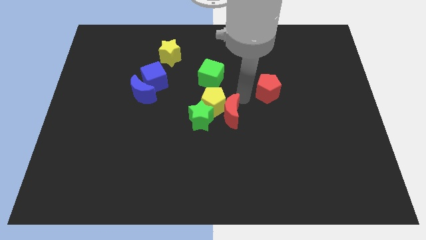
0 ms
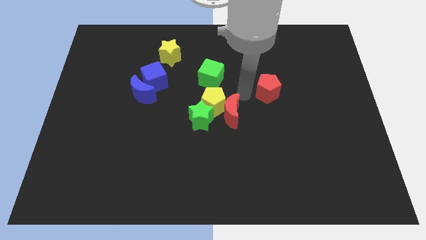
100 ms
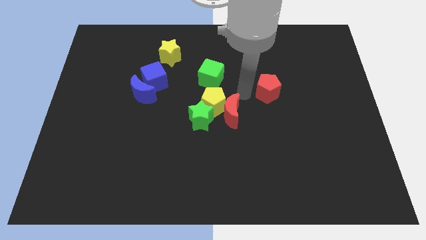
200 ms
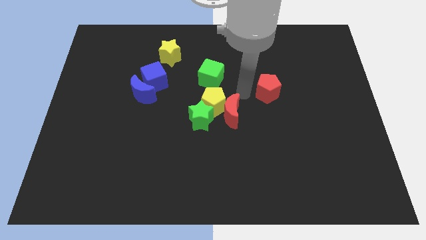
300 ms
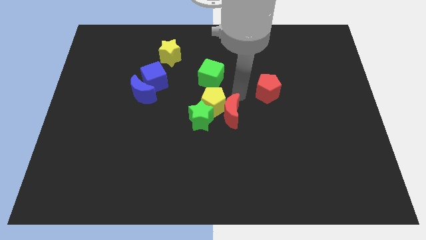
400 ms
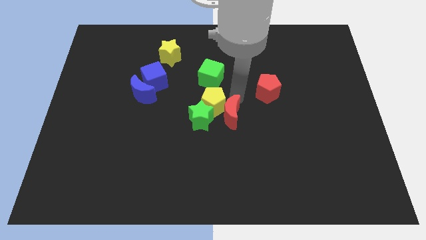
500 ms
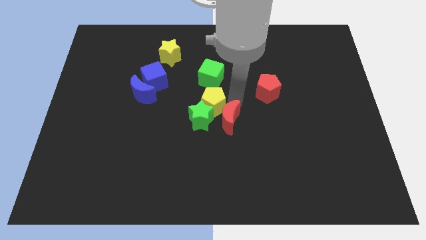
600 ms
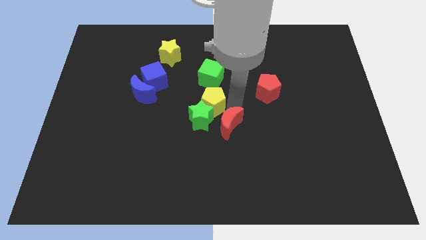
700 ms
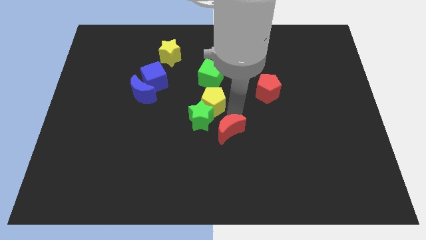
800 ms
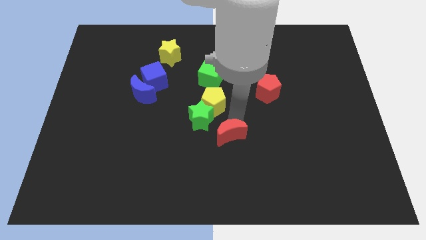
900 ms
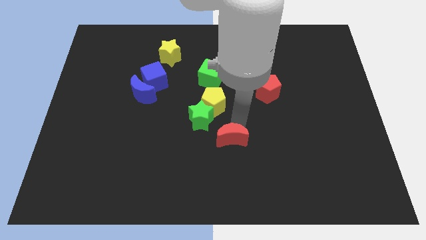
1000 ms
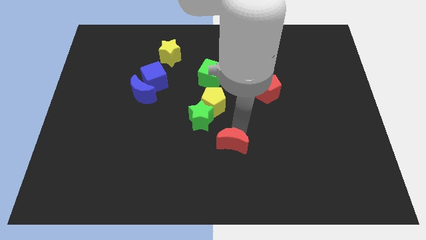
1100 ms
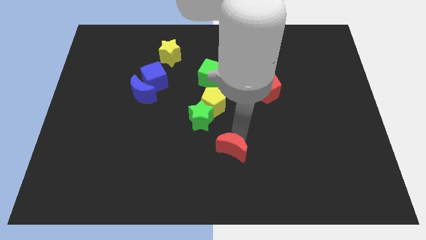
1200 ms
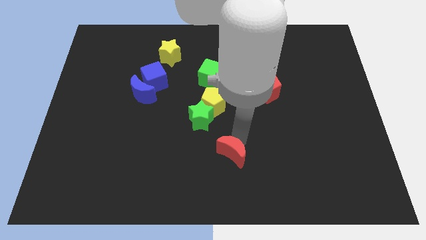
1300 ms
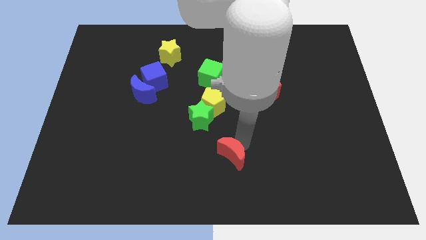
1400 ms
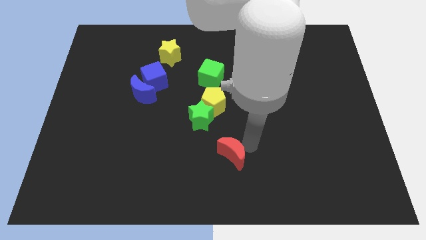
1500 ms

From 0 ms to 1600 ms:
separate the red moon from the yellow pentagon

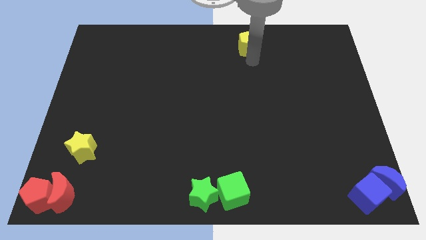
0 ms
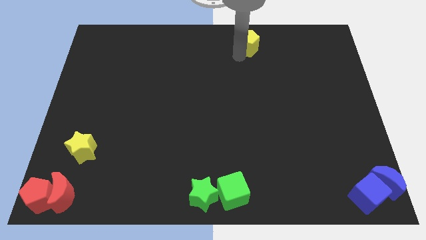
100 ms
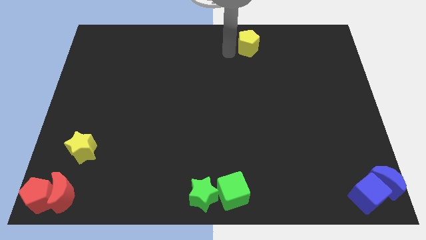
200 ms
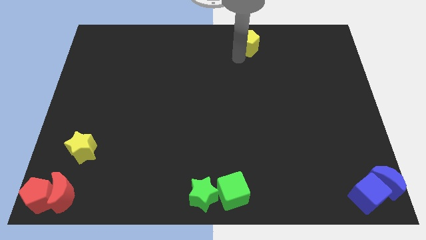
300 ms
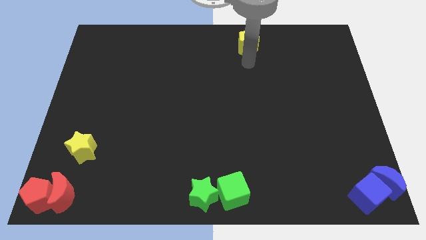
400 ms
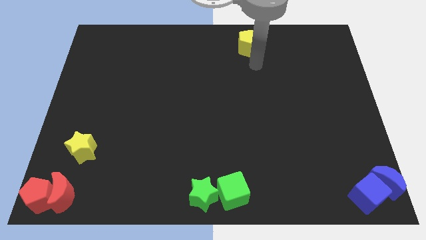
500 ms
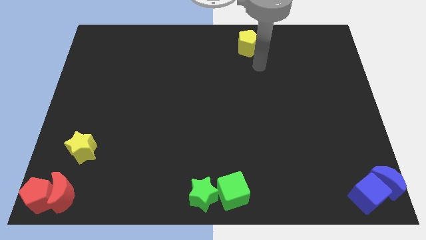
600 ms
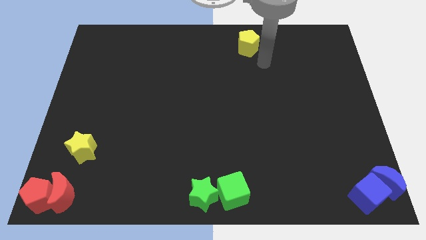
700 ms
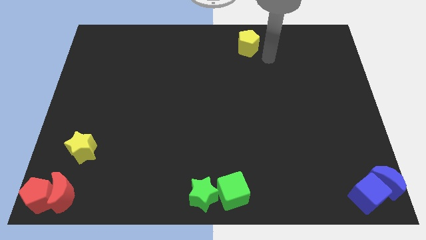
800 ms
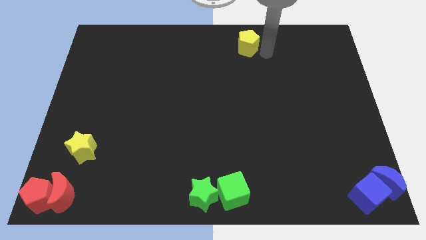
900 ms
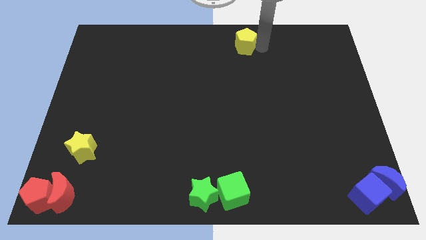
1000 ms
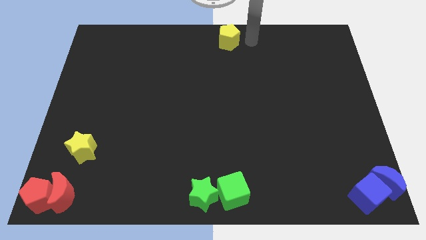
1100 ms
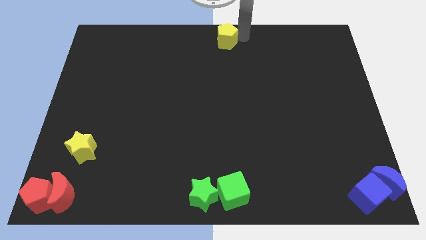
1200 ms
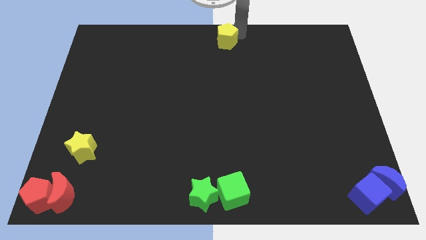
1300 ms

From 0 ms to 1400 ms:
place the yellow pentagon towards the top center of the board

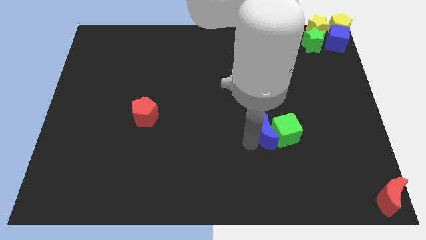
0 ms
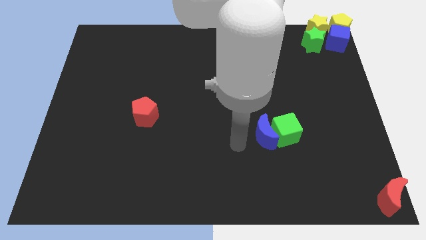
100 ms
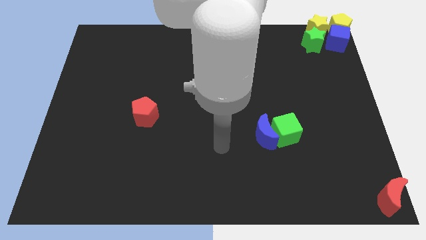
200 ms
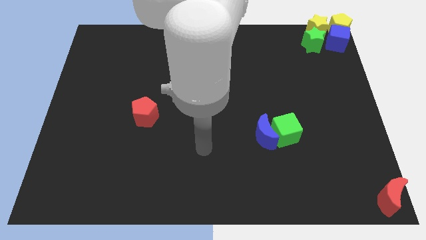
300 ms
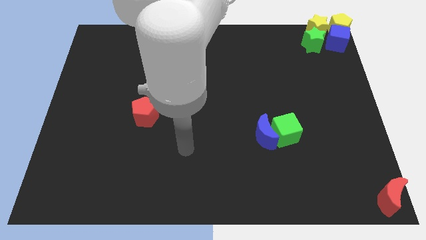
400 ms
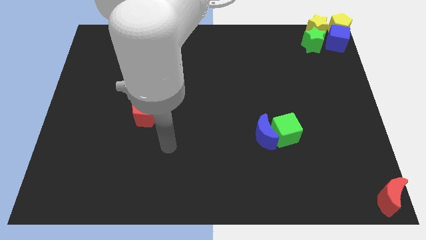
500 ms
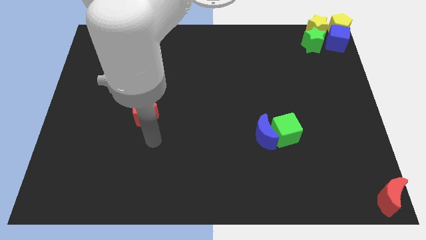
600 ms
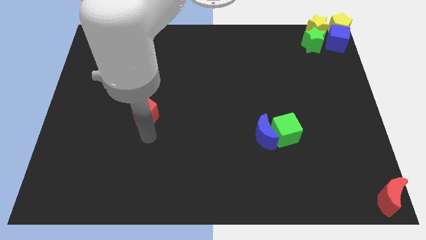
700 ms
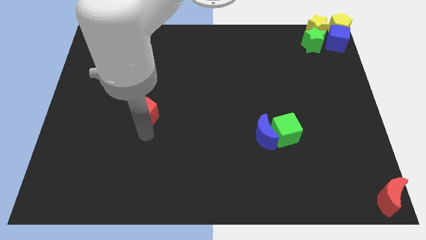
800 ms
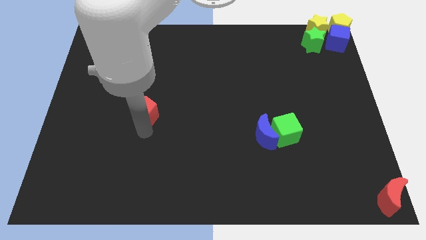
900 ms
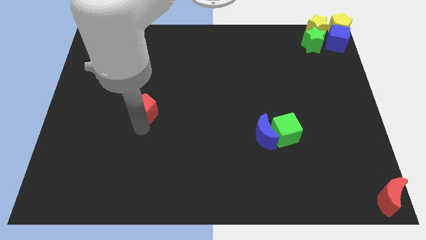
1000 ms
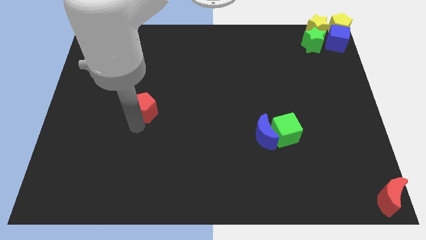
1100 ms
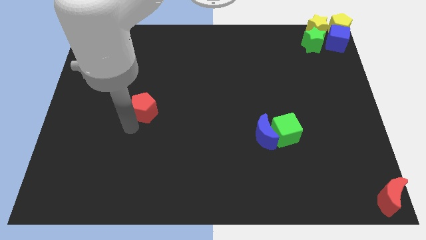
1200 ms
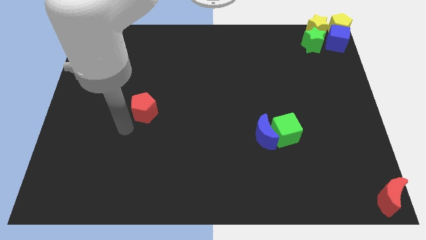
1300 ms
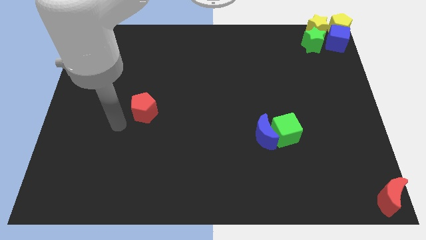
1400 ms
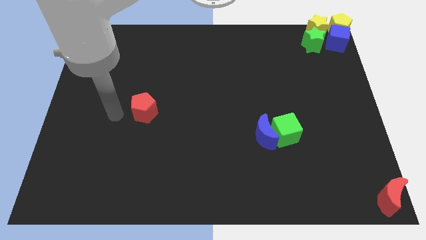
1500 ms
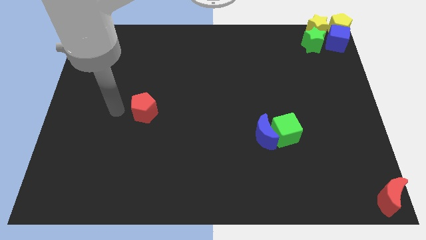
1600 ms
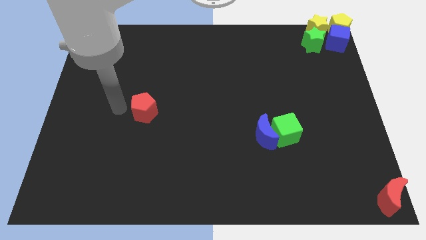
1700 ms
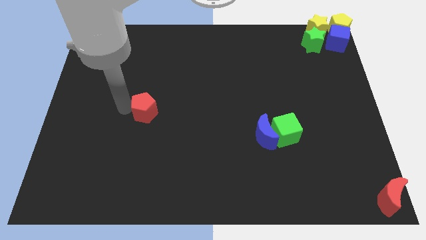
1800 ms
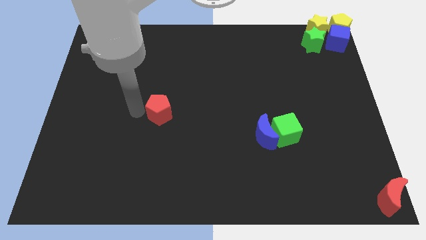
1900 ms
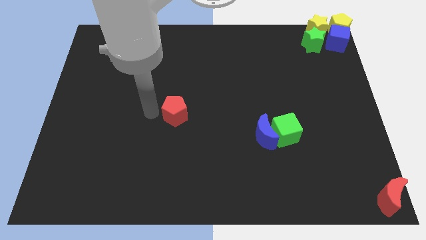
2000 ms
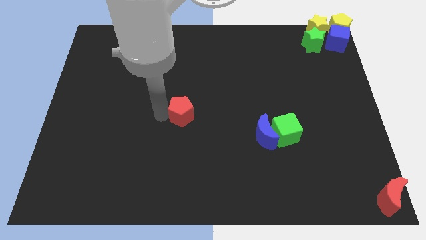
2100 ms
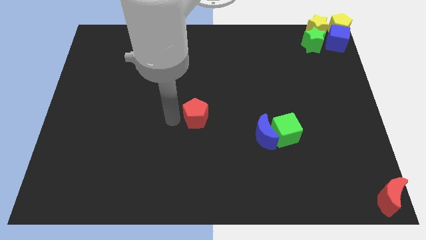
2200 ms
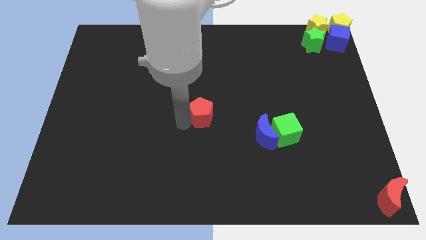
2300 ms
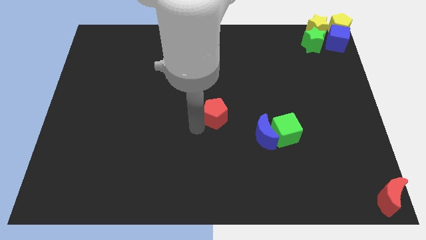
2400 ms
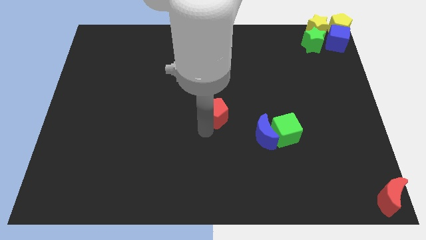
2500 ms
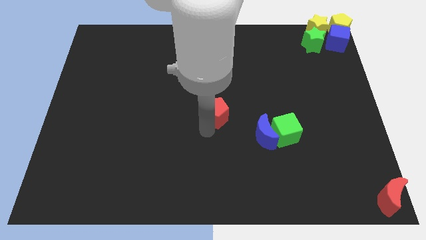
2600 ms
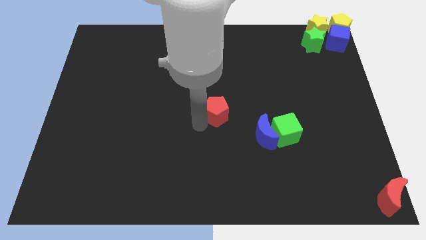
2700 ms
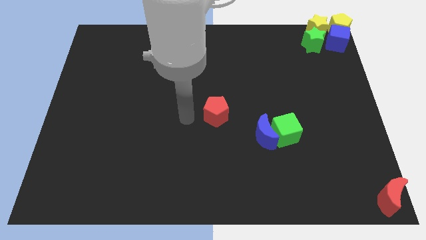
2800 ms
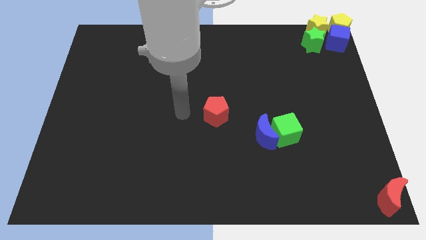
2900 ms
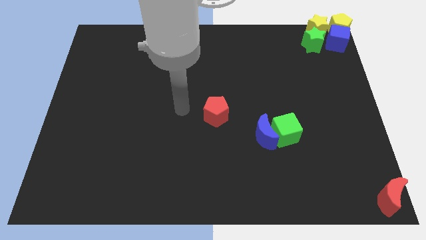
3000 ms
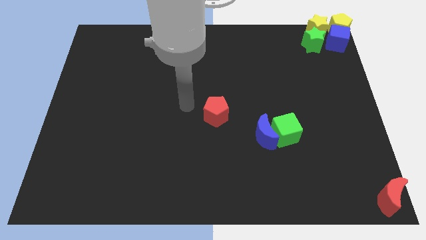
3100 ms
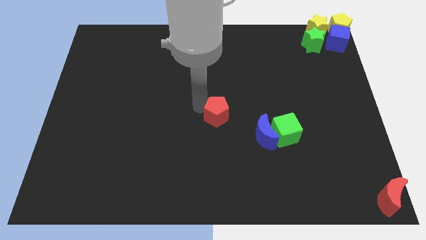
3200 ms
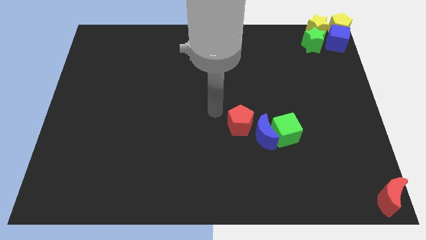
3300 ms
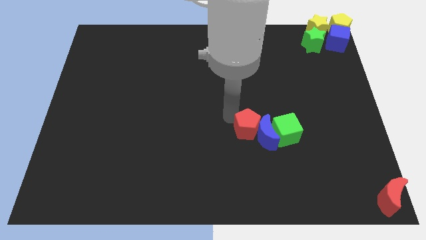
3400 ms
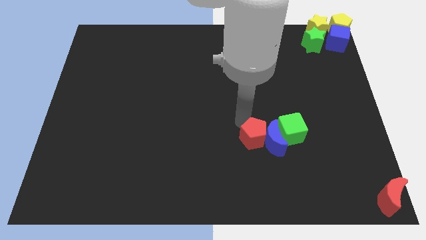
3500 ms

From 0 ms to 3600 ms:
move red pentagon in to blue crescent

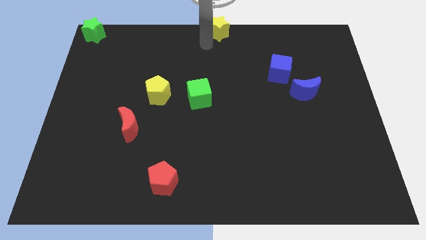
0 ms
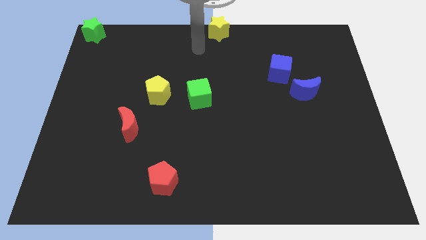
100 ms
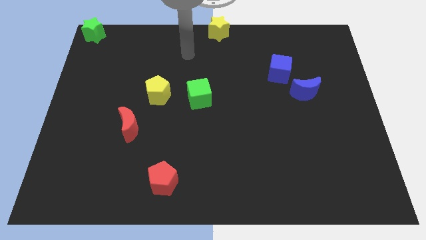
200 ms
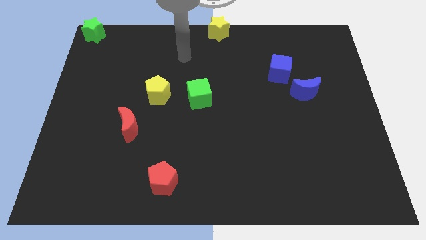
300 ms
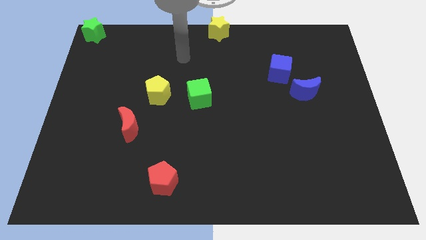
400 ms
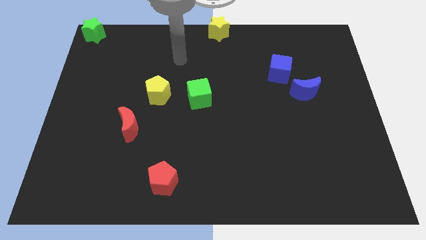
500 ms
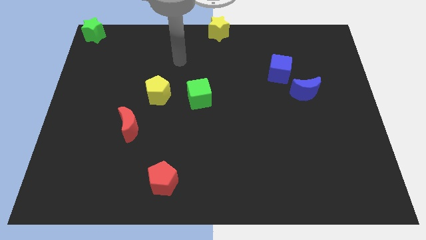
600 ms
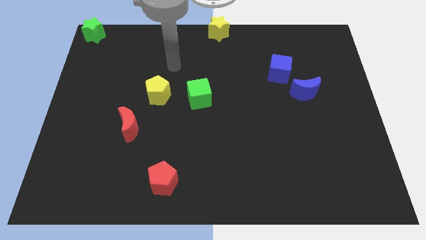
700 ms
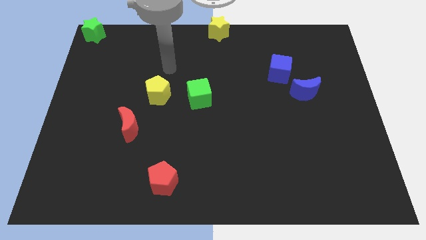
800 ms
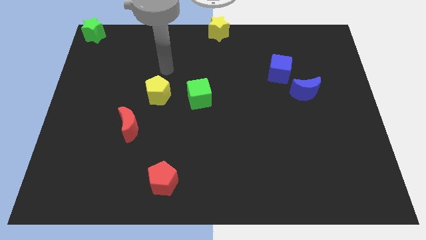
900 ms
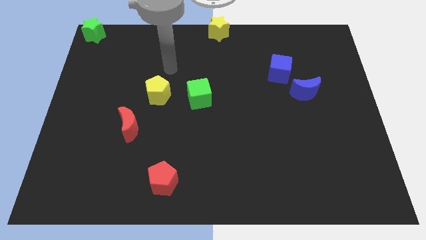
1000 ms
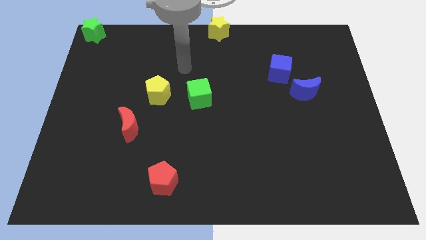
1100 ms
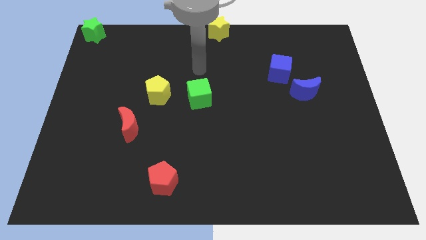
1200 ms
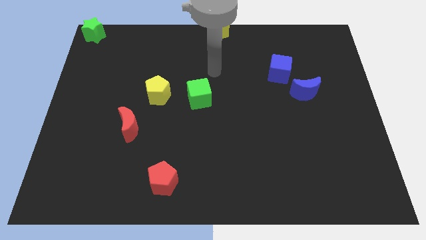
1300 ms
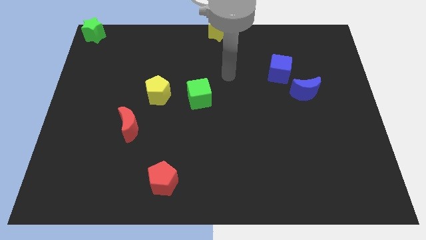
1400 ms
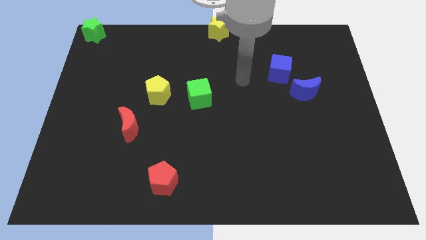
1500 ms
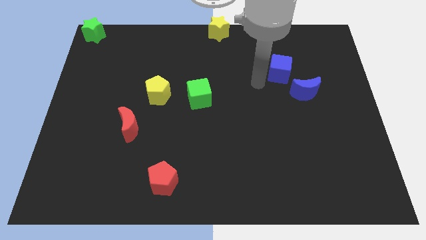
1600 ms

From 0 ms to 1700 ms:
point the arm to the left of the blue cube

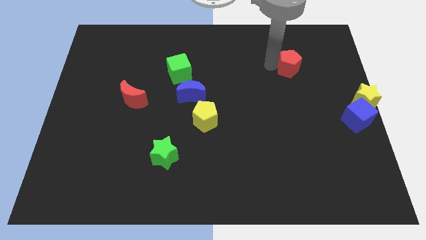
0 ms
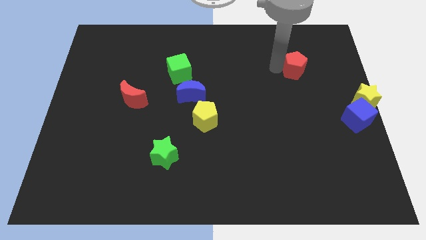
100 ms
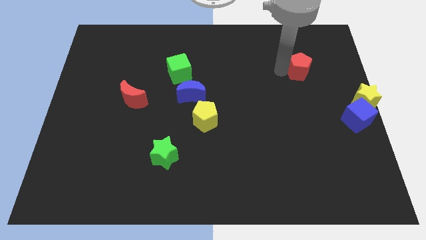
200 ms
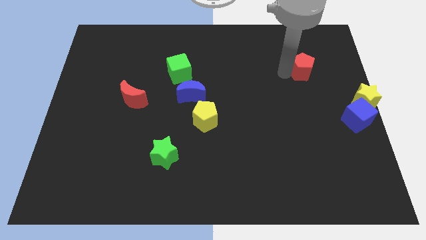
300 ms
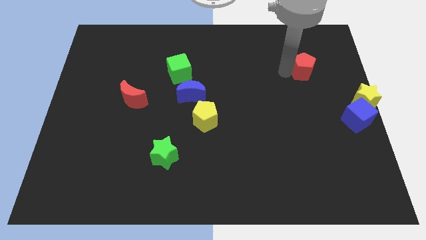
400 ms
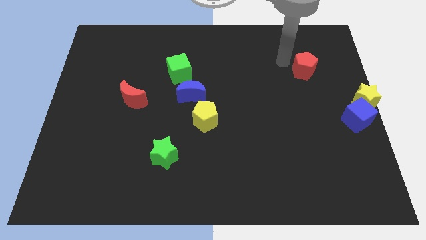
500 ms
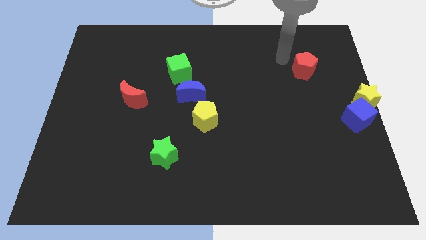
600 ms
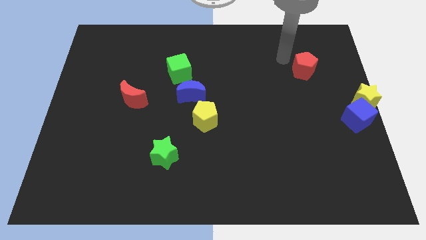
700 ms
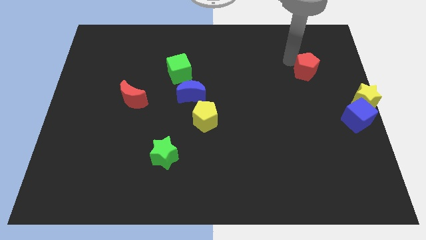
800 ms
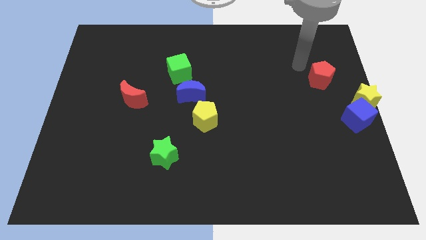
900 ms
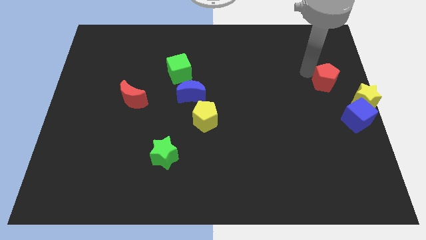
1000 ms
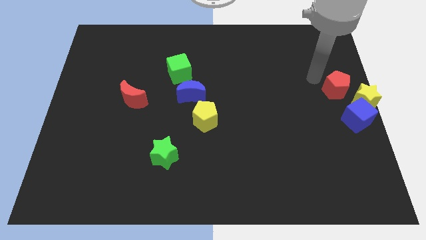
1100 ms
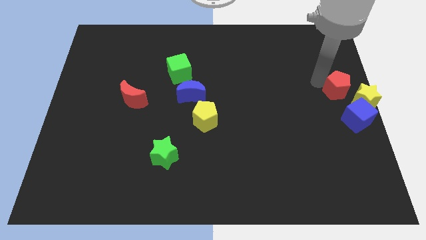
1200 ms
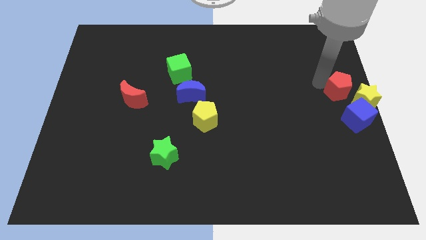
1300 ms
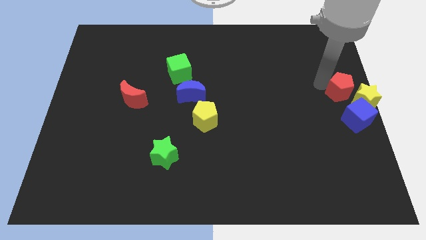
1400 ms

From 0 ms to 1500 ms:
move the red pentagon towards the yellow star
